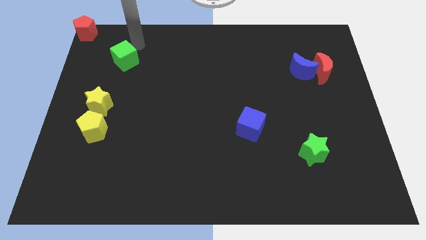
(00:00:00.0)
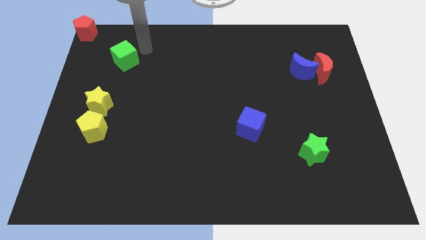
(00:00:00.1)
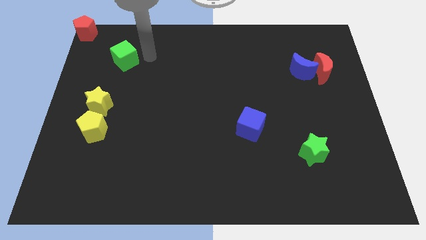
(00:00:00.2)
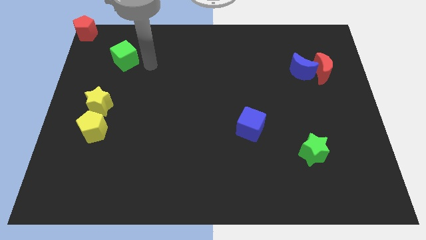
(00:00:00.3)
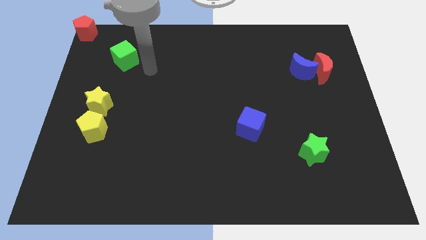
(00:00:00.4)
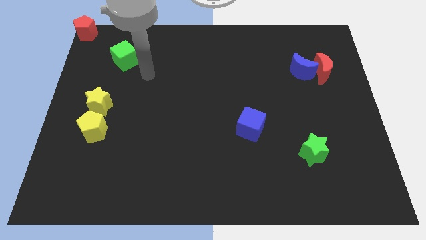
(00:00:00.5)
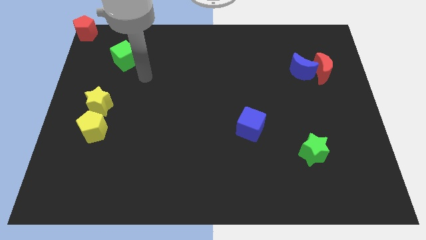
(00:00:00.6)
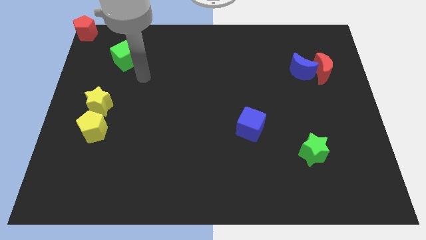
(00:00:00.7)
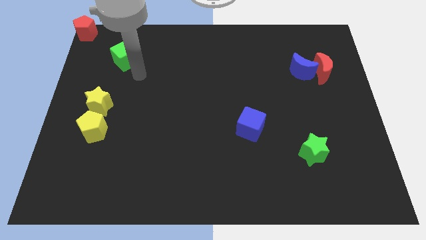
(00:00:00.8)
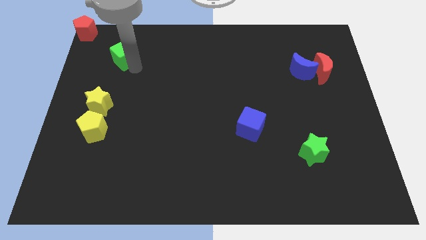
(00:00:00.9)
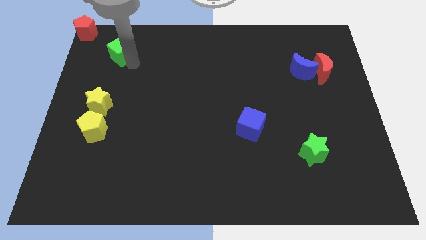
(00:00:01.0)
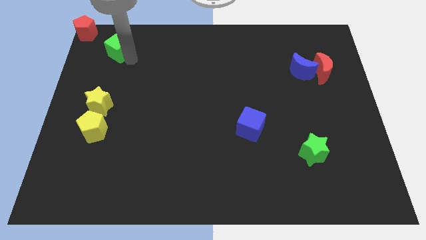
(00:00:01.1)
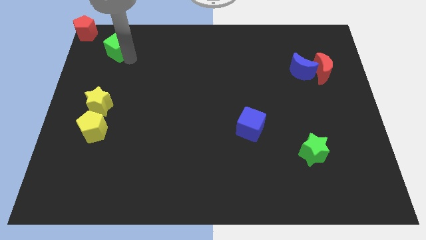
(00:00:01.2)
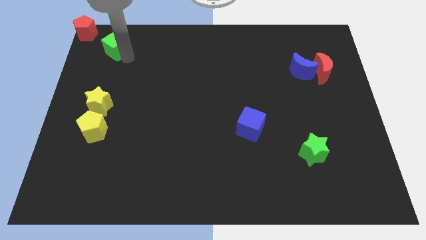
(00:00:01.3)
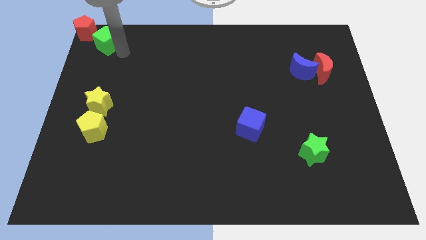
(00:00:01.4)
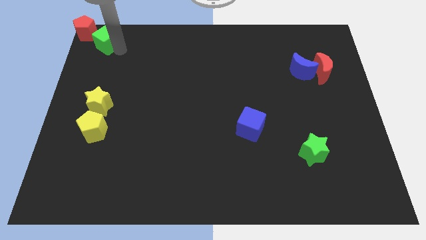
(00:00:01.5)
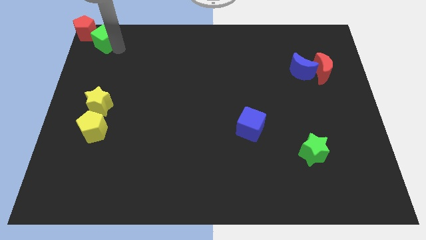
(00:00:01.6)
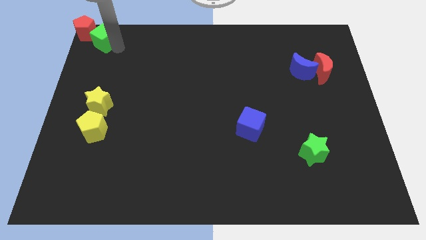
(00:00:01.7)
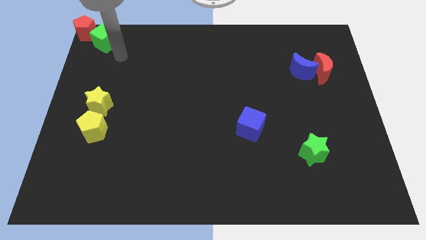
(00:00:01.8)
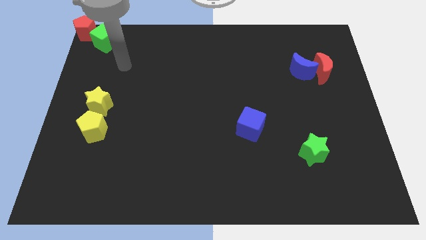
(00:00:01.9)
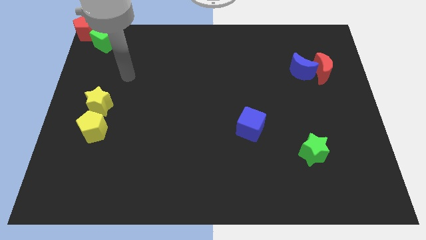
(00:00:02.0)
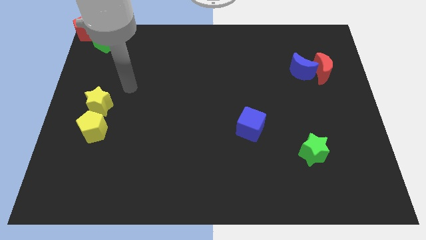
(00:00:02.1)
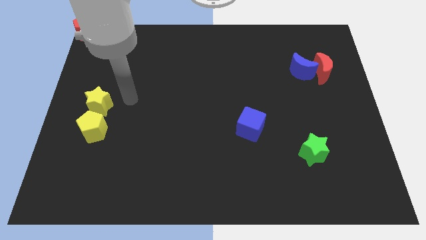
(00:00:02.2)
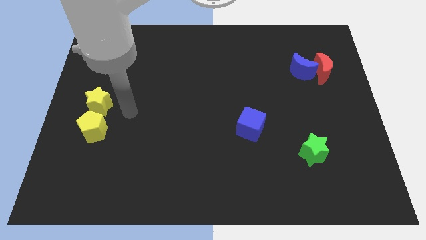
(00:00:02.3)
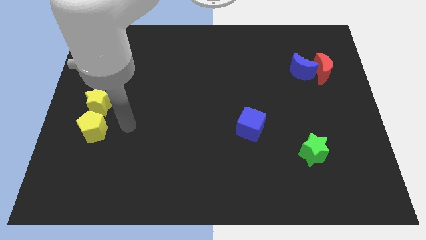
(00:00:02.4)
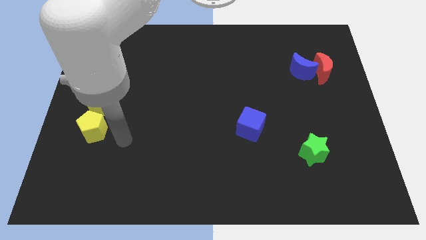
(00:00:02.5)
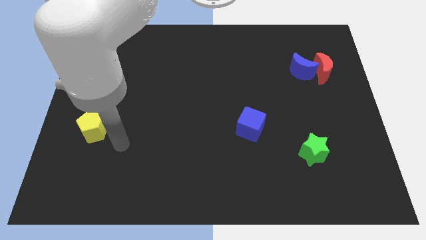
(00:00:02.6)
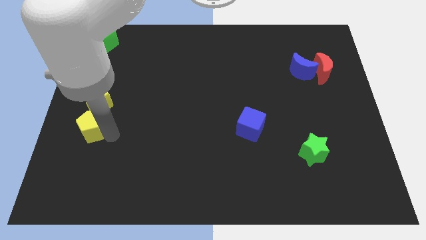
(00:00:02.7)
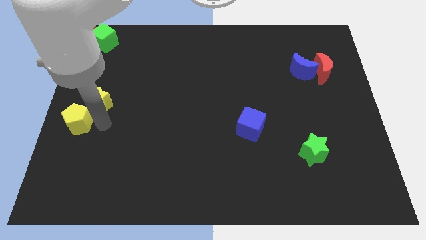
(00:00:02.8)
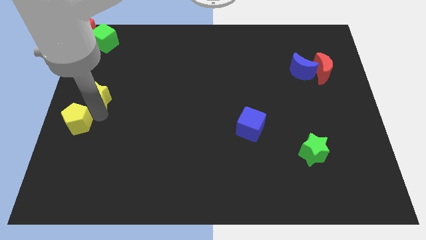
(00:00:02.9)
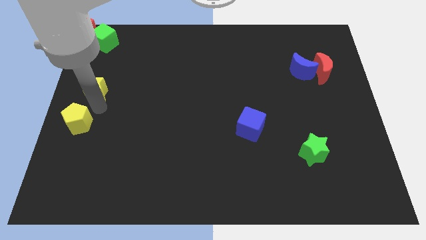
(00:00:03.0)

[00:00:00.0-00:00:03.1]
move green cube into red pentagon

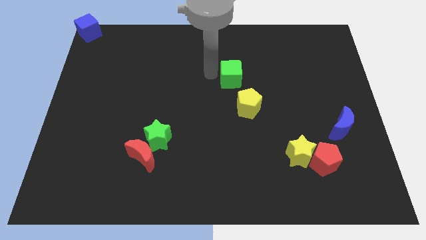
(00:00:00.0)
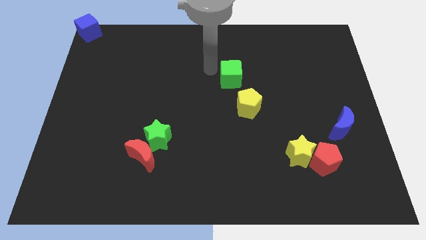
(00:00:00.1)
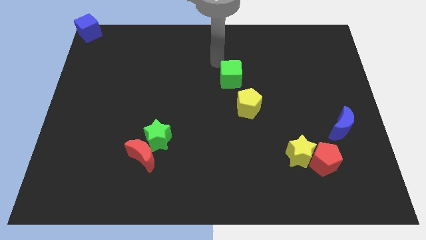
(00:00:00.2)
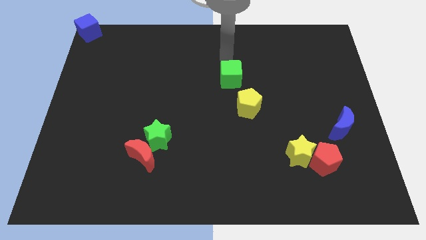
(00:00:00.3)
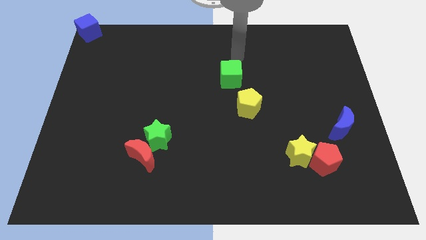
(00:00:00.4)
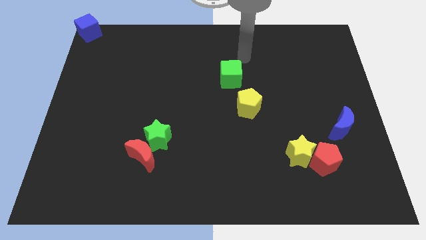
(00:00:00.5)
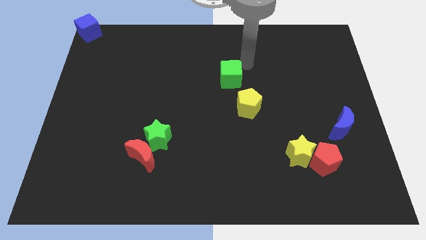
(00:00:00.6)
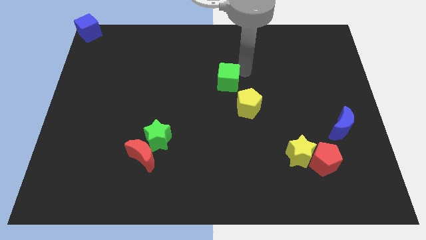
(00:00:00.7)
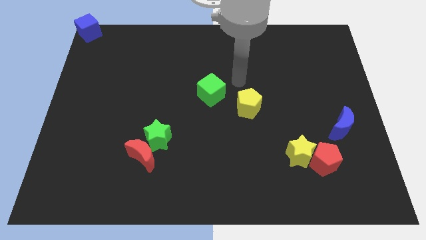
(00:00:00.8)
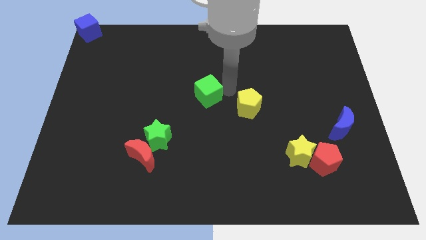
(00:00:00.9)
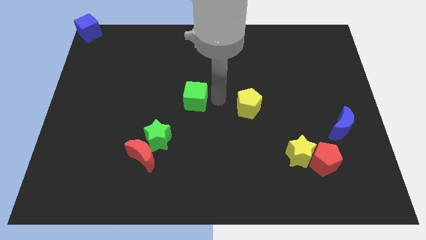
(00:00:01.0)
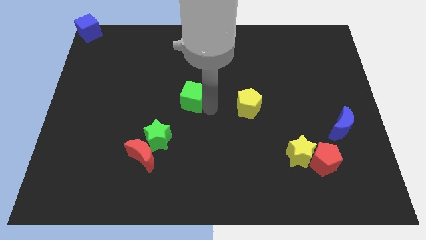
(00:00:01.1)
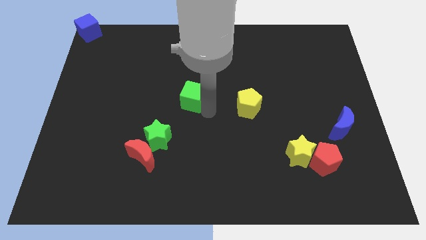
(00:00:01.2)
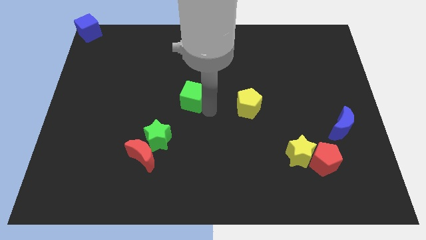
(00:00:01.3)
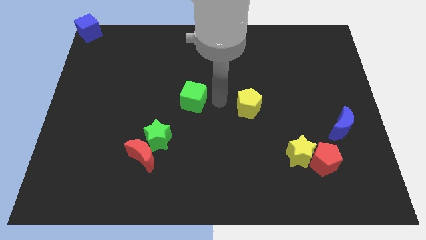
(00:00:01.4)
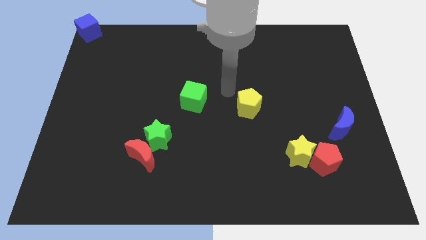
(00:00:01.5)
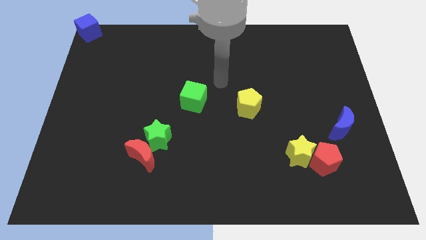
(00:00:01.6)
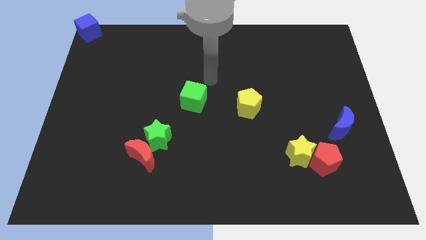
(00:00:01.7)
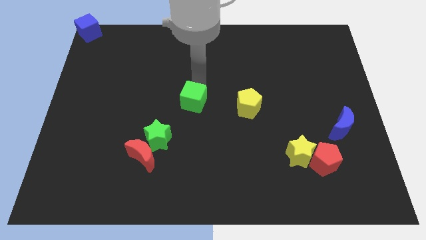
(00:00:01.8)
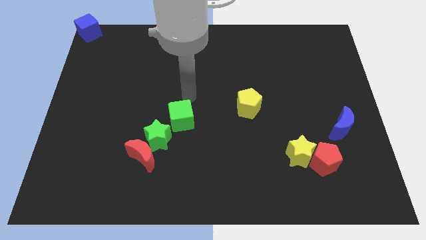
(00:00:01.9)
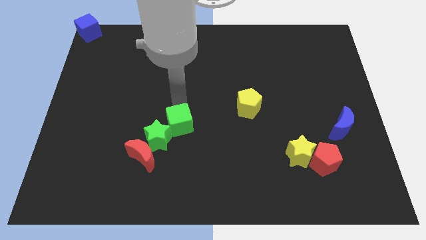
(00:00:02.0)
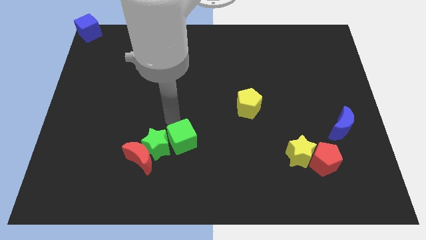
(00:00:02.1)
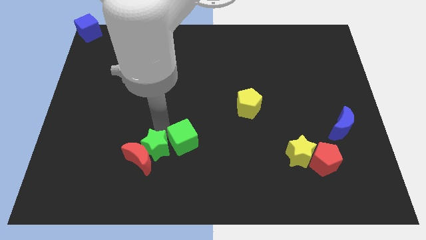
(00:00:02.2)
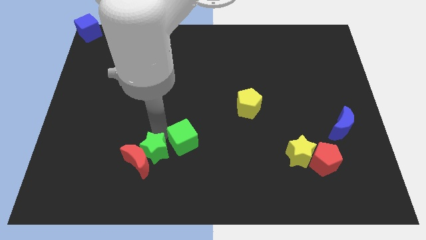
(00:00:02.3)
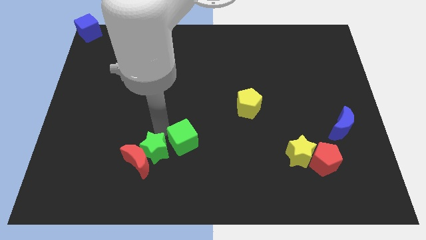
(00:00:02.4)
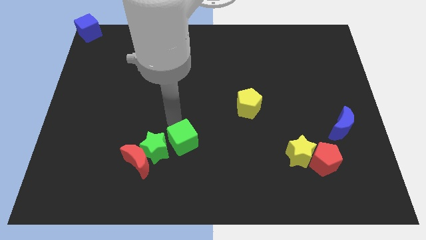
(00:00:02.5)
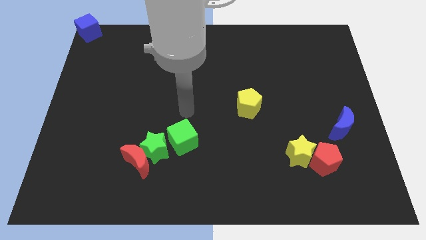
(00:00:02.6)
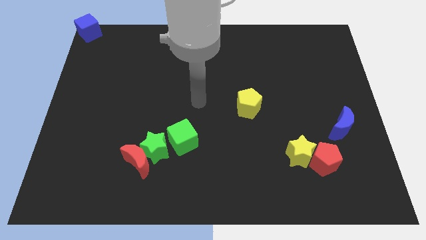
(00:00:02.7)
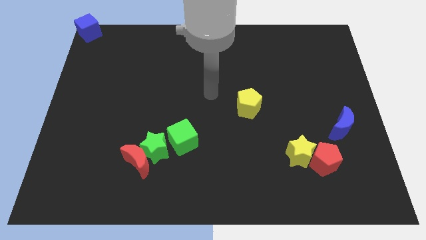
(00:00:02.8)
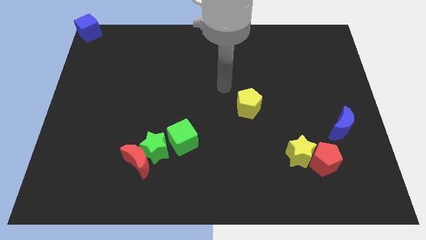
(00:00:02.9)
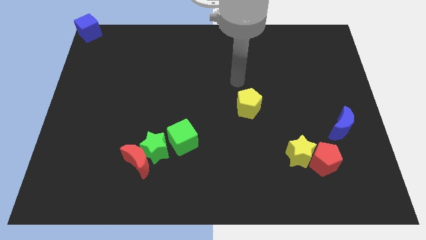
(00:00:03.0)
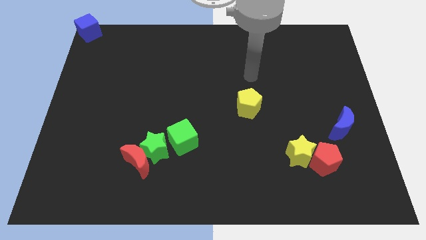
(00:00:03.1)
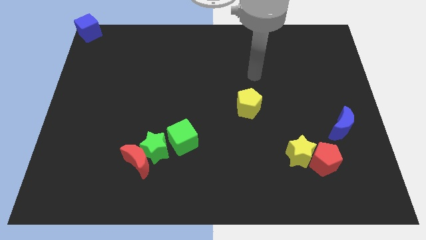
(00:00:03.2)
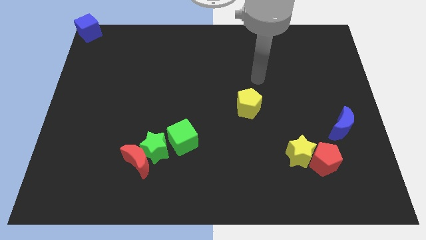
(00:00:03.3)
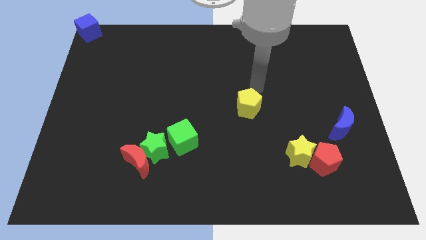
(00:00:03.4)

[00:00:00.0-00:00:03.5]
push the green cube into the green star

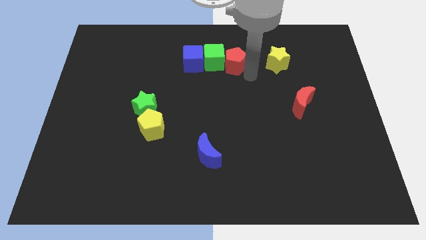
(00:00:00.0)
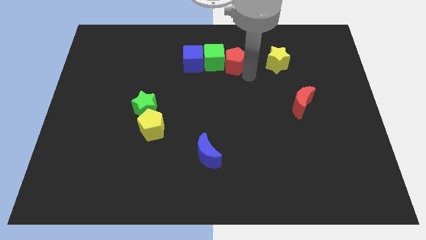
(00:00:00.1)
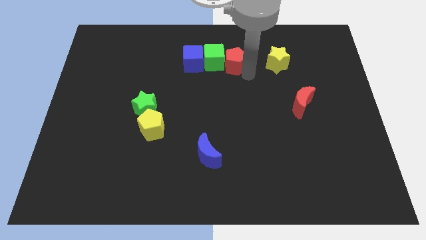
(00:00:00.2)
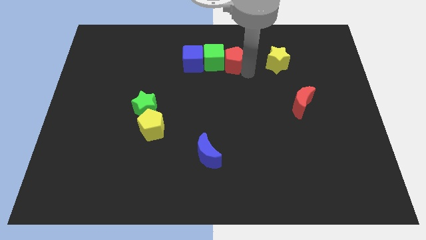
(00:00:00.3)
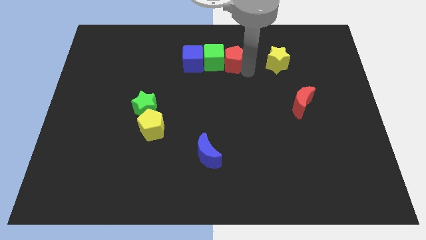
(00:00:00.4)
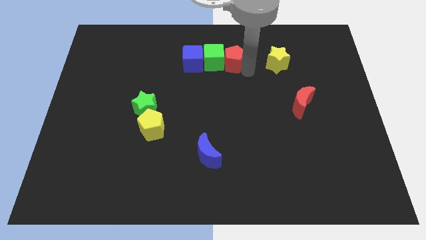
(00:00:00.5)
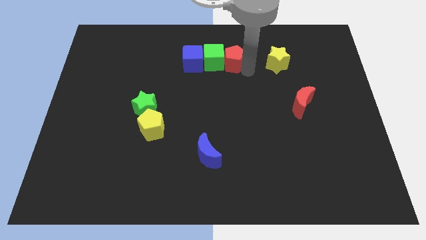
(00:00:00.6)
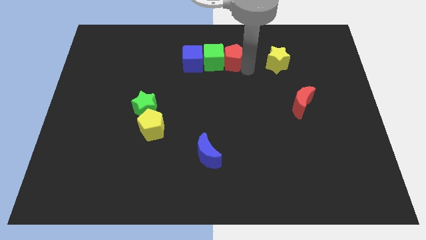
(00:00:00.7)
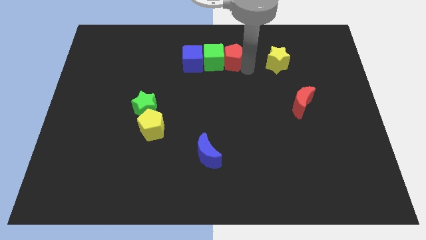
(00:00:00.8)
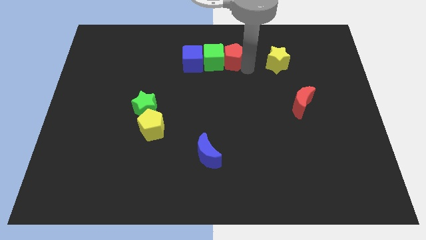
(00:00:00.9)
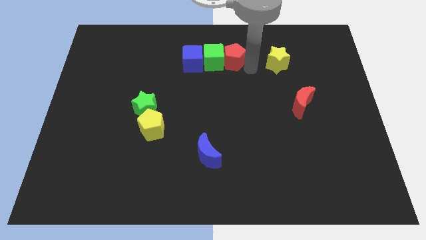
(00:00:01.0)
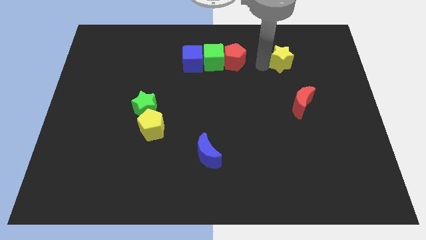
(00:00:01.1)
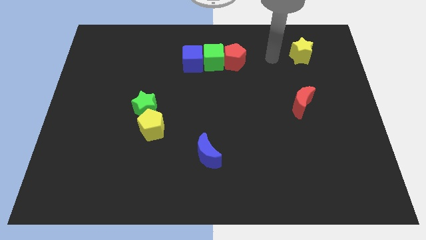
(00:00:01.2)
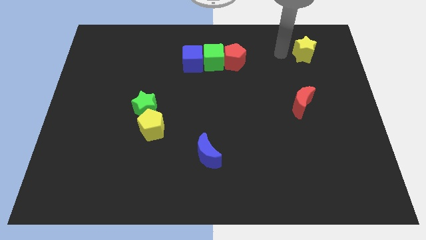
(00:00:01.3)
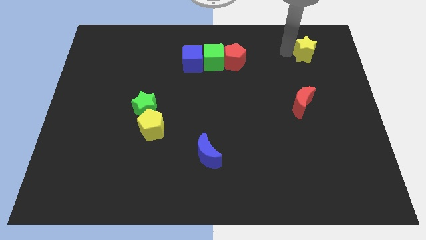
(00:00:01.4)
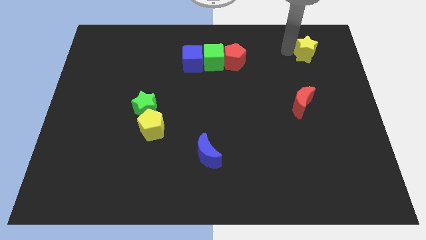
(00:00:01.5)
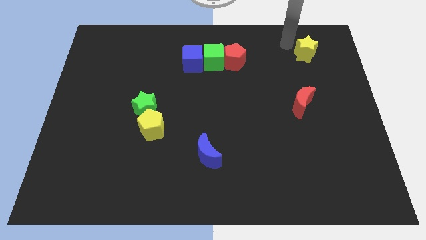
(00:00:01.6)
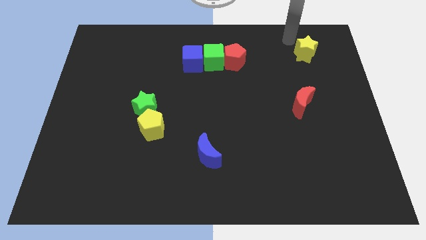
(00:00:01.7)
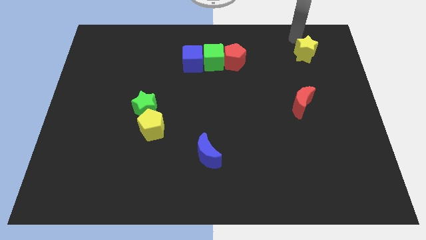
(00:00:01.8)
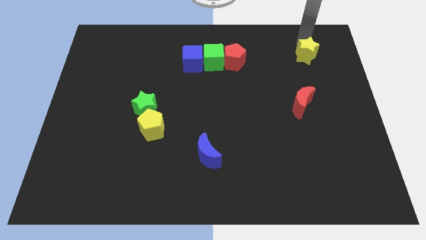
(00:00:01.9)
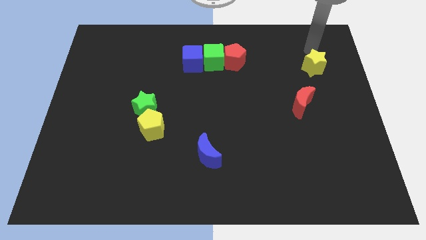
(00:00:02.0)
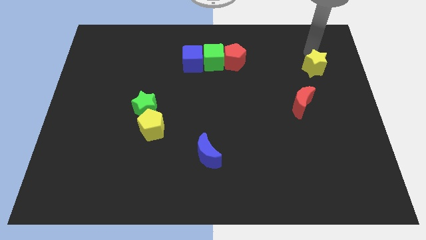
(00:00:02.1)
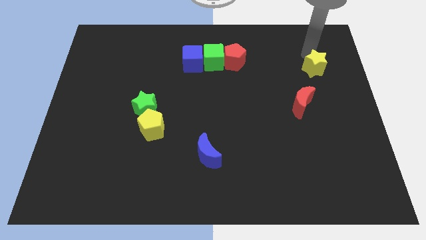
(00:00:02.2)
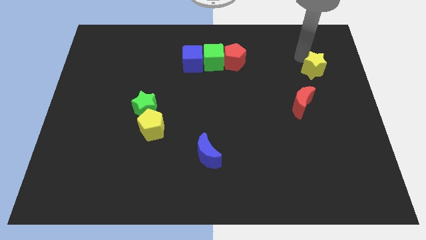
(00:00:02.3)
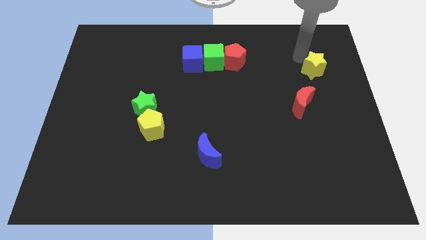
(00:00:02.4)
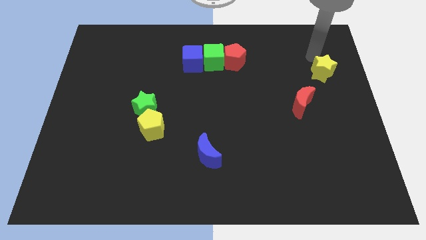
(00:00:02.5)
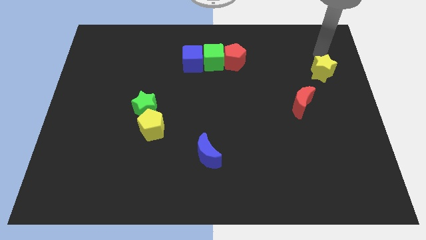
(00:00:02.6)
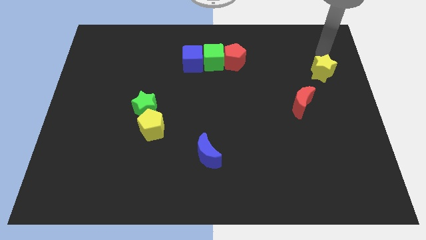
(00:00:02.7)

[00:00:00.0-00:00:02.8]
push the yellow star diagonally right above the red crescent
